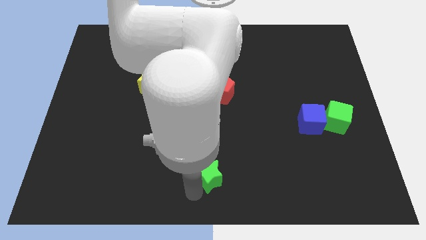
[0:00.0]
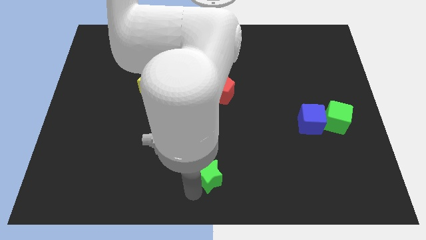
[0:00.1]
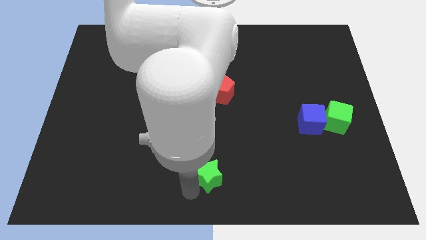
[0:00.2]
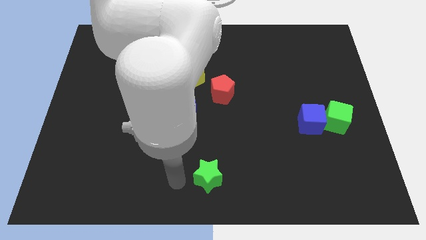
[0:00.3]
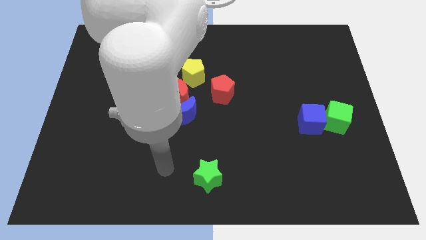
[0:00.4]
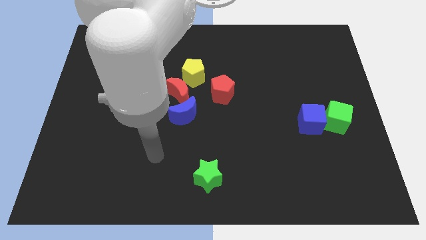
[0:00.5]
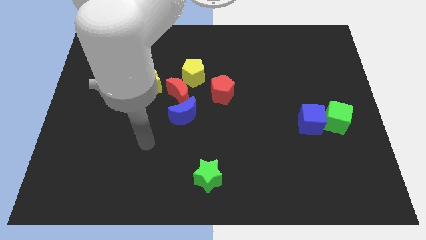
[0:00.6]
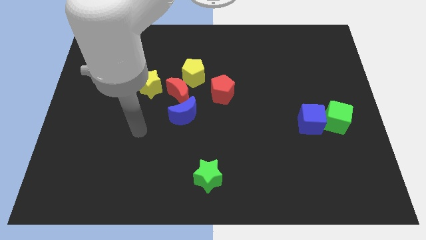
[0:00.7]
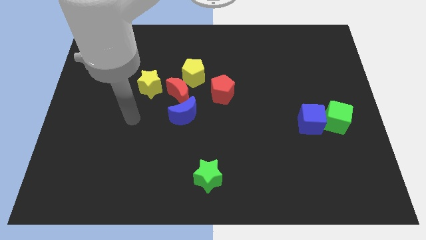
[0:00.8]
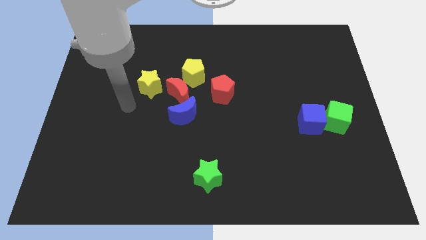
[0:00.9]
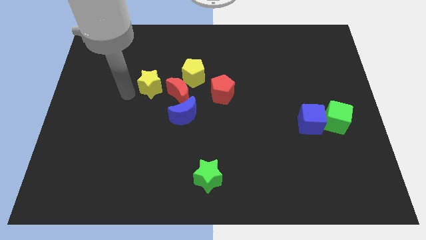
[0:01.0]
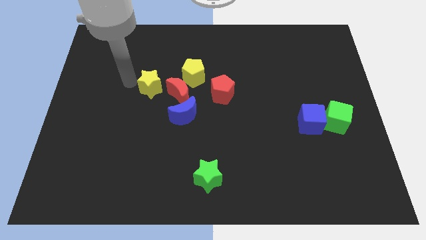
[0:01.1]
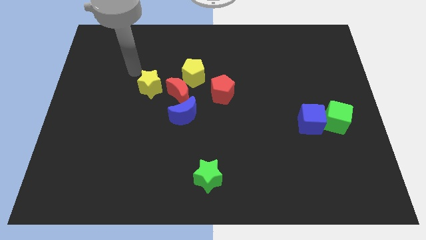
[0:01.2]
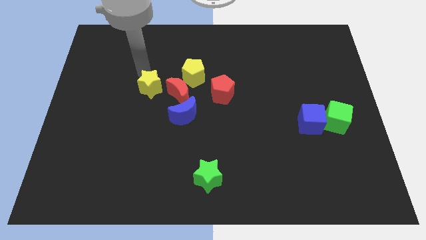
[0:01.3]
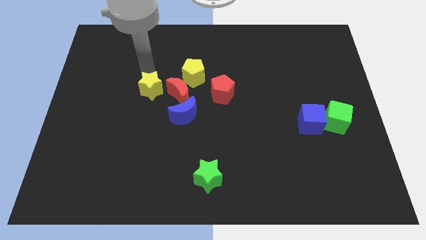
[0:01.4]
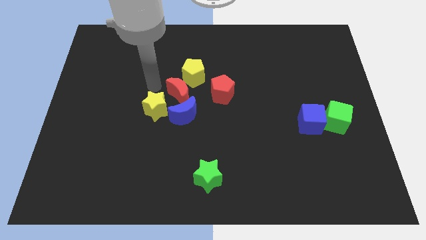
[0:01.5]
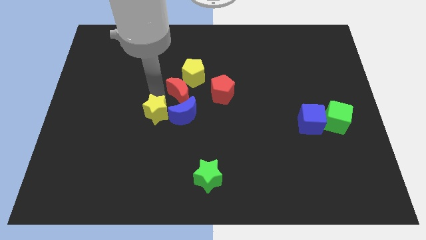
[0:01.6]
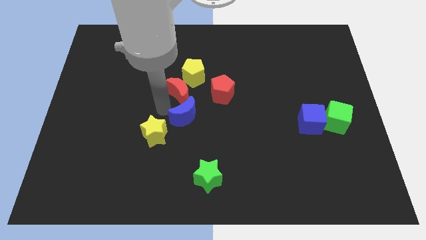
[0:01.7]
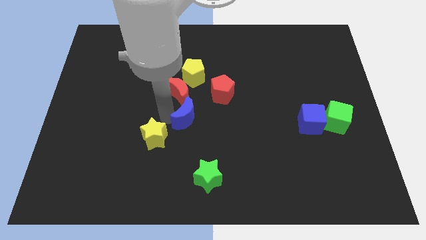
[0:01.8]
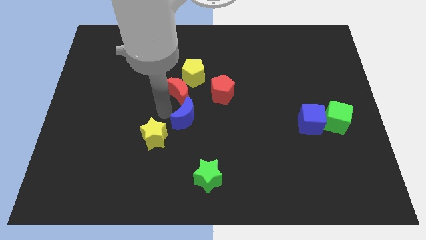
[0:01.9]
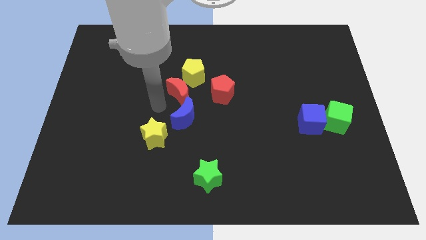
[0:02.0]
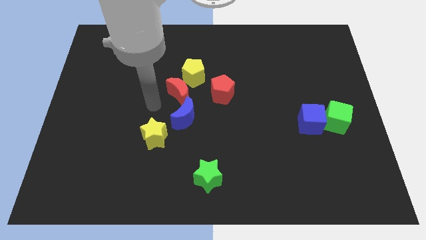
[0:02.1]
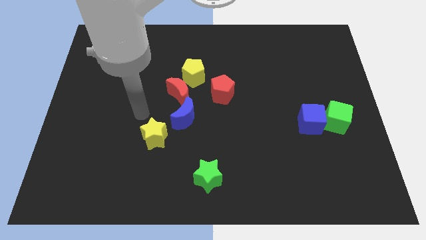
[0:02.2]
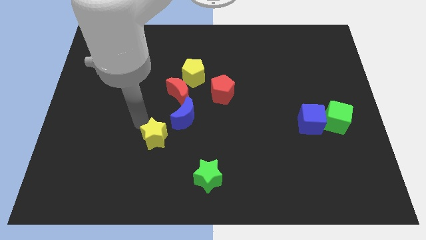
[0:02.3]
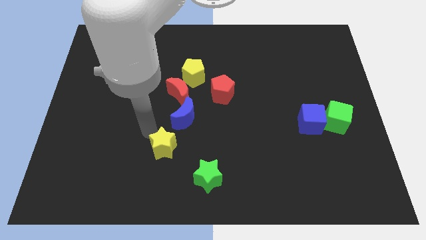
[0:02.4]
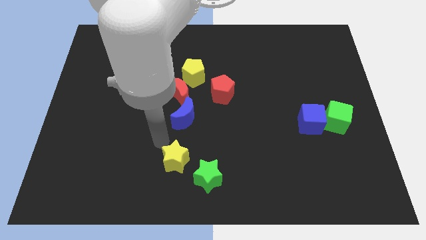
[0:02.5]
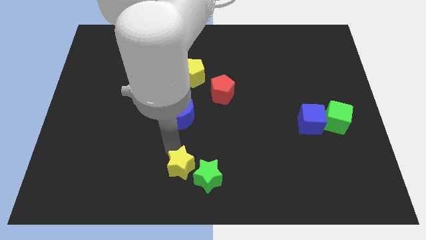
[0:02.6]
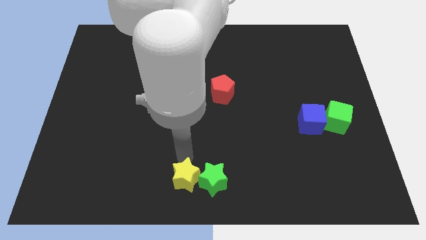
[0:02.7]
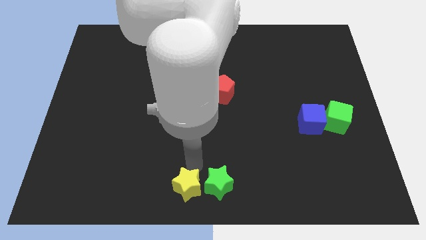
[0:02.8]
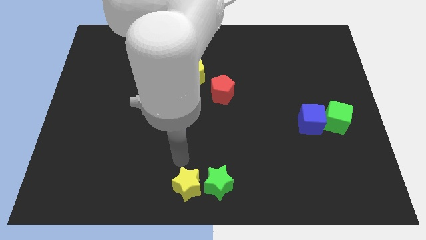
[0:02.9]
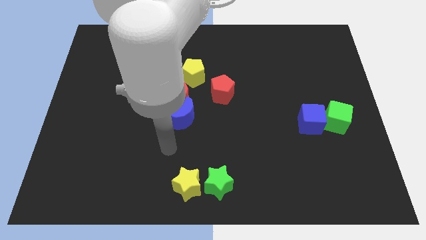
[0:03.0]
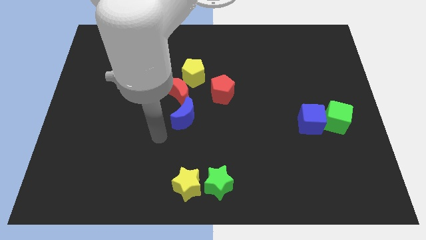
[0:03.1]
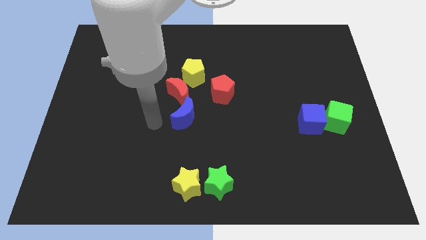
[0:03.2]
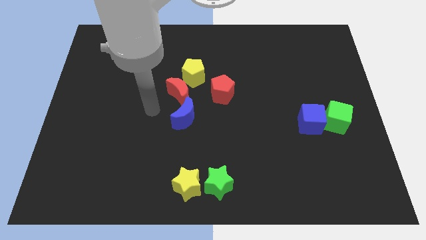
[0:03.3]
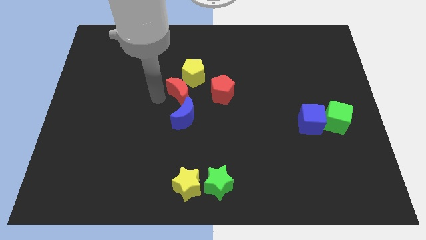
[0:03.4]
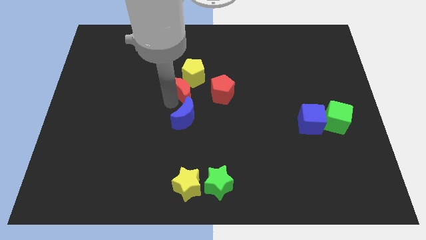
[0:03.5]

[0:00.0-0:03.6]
place the yellow star left to the green star

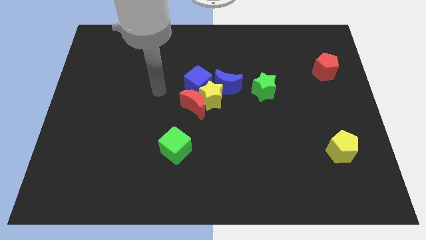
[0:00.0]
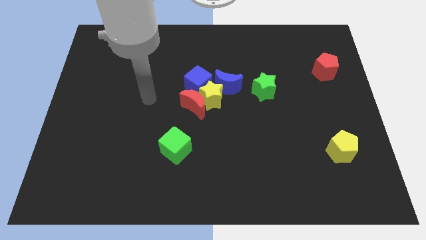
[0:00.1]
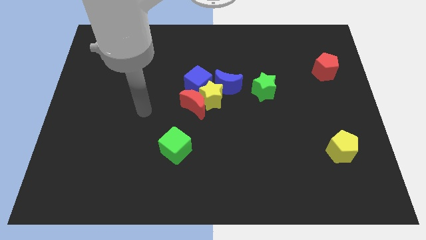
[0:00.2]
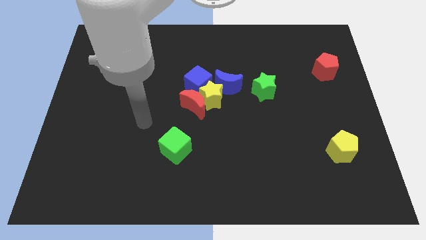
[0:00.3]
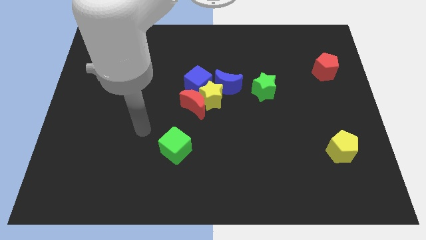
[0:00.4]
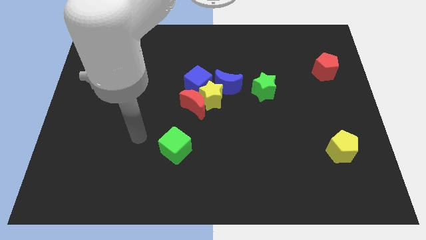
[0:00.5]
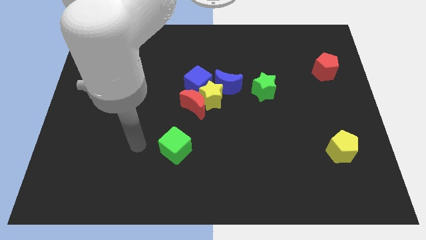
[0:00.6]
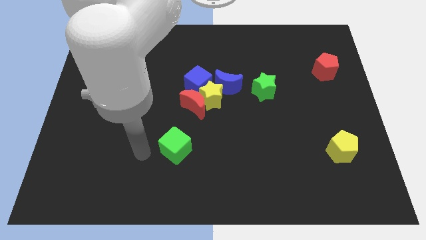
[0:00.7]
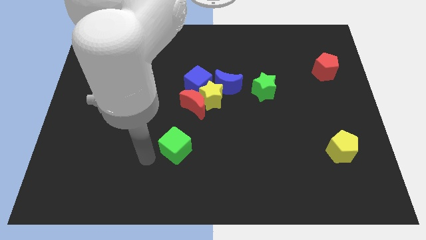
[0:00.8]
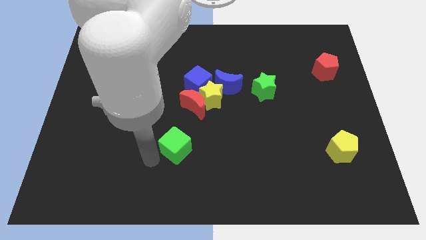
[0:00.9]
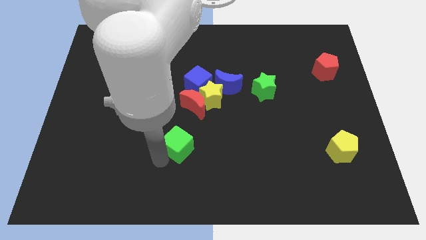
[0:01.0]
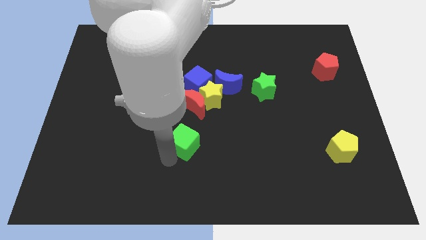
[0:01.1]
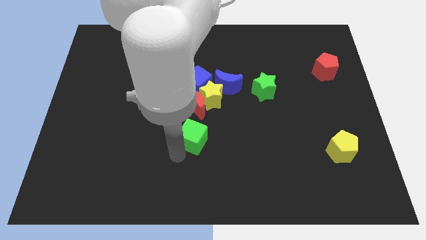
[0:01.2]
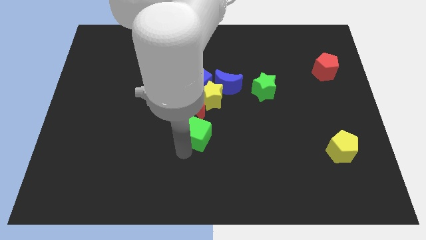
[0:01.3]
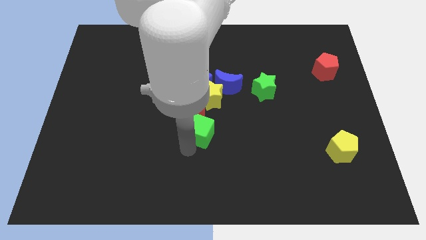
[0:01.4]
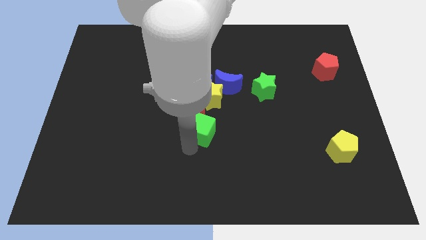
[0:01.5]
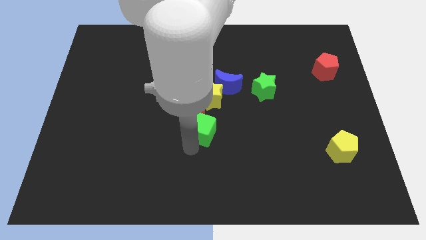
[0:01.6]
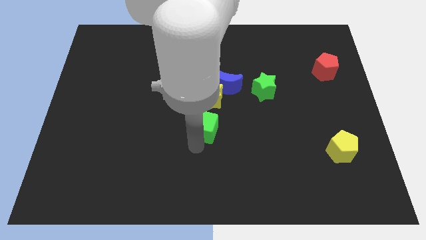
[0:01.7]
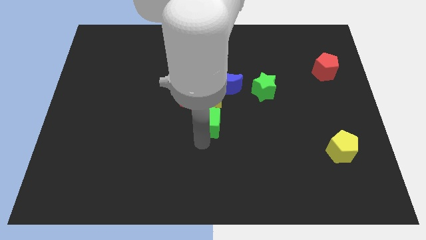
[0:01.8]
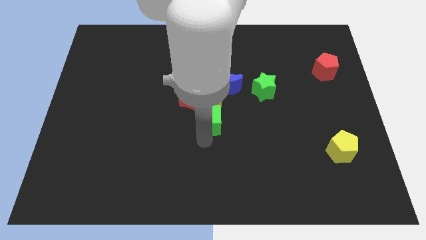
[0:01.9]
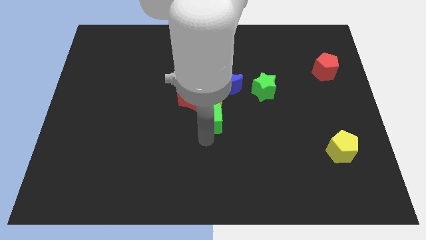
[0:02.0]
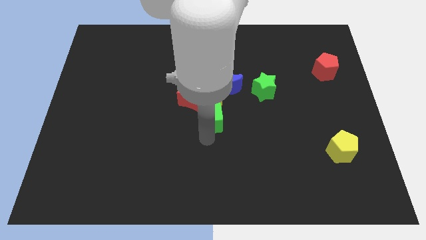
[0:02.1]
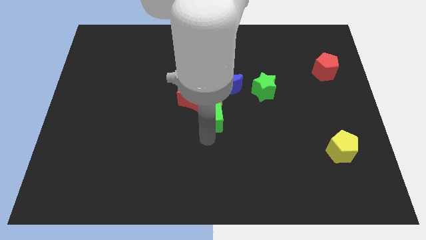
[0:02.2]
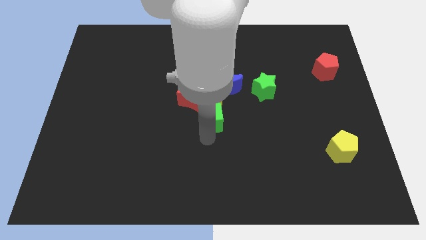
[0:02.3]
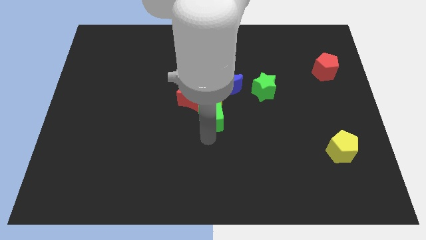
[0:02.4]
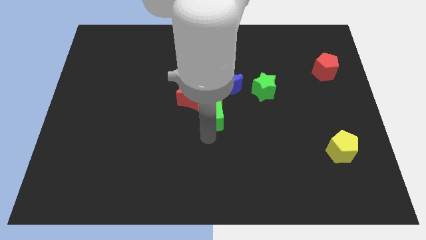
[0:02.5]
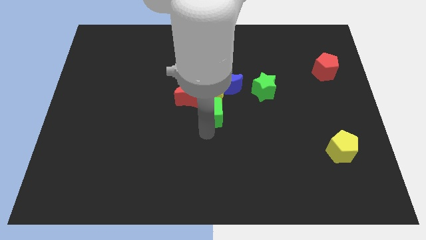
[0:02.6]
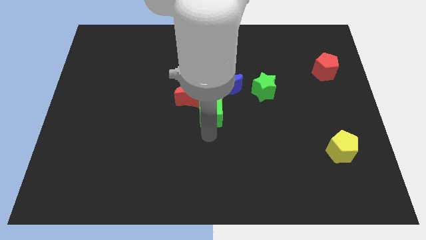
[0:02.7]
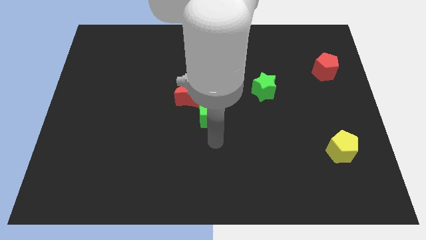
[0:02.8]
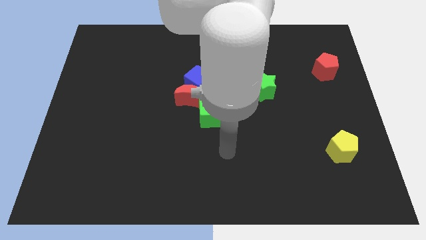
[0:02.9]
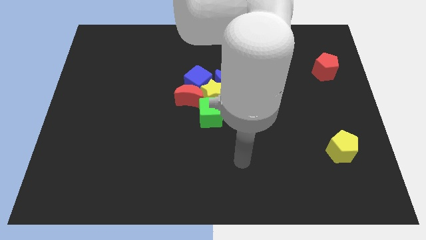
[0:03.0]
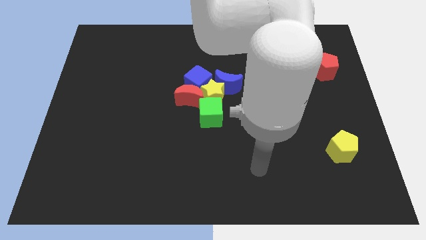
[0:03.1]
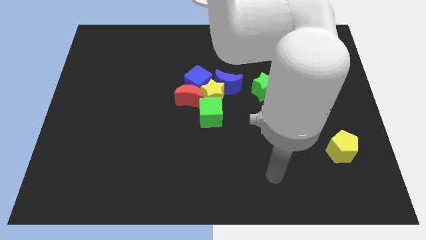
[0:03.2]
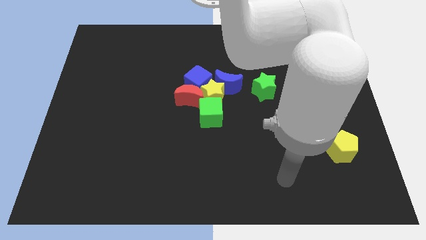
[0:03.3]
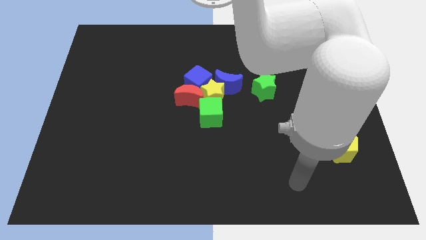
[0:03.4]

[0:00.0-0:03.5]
move the green cube to the bottom side of the yellow star

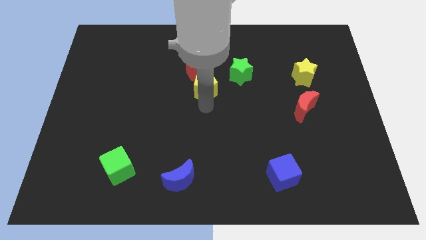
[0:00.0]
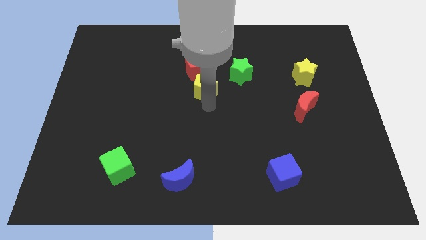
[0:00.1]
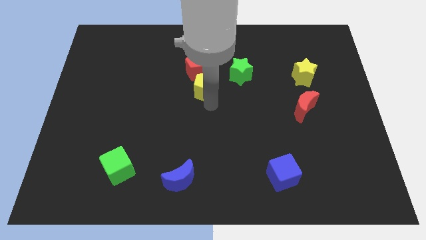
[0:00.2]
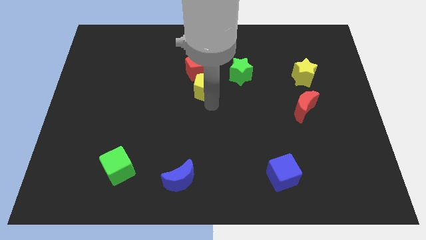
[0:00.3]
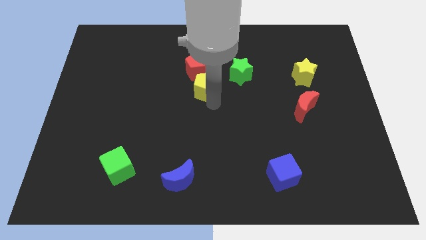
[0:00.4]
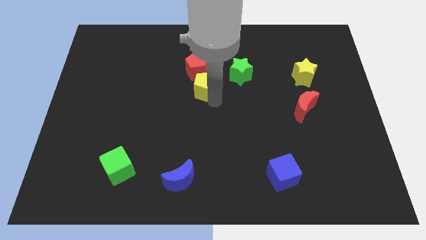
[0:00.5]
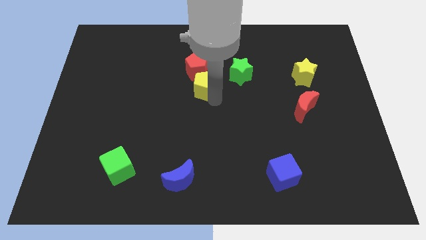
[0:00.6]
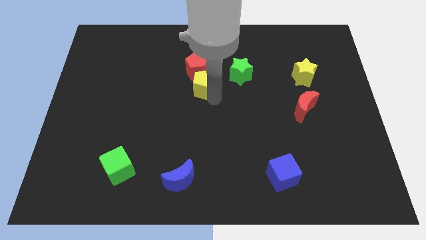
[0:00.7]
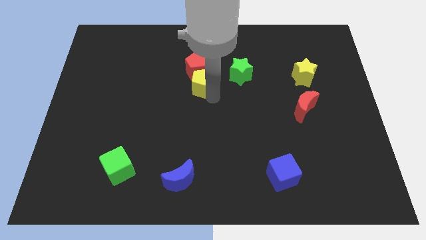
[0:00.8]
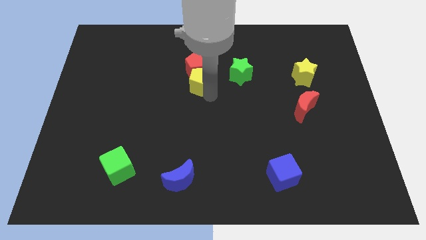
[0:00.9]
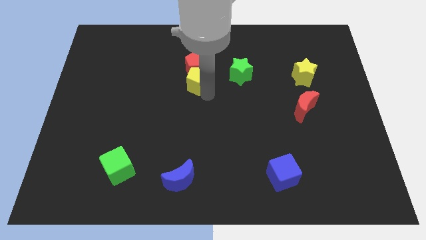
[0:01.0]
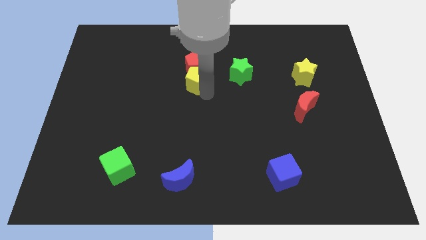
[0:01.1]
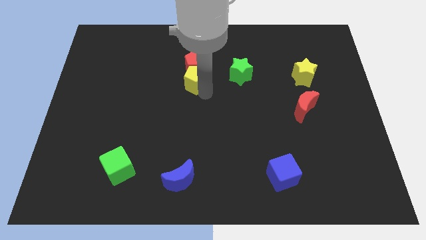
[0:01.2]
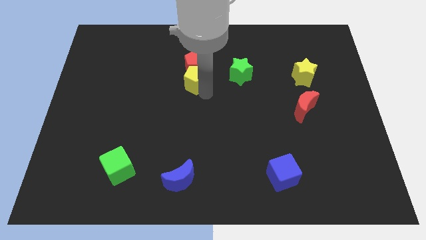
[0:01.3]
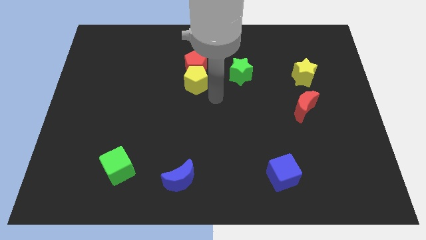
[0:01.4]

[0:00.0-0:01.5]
push the yellow pentagon into the red pentagon

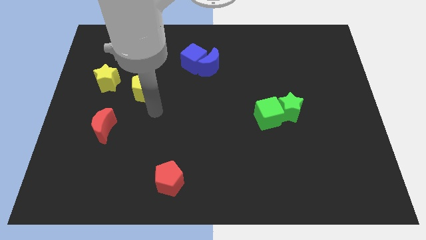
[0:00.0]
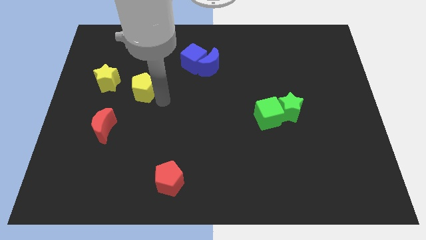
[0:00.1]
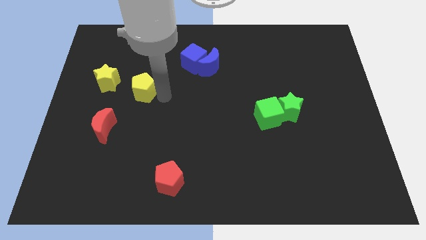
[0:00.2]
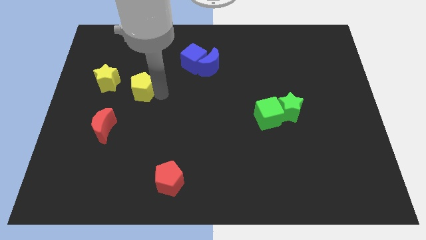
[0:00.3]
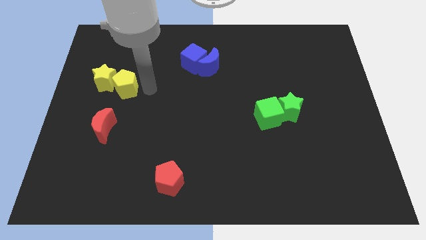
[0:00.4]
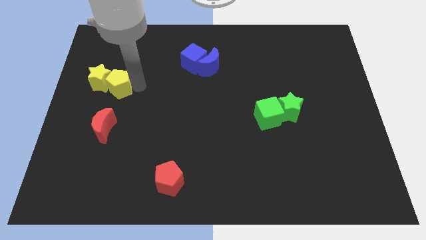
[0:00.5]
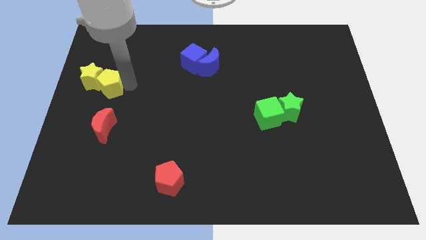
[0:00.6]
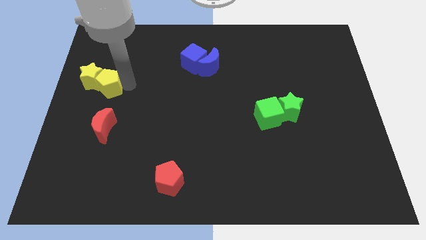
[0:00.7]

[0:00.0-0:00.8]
push yellow pentagon above red crescent
